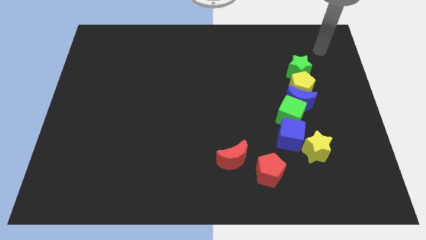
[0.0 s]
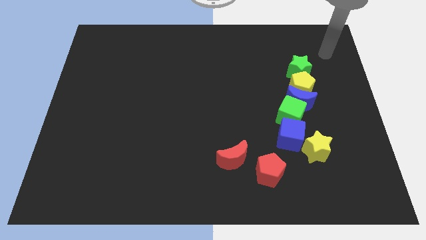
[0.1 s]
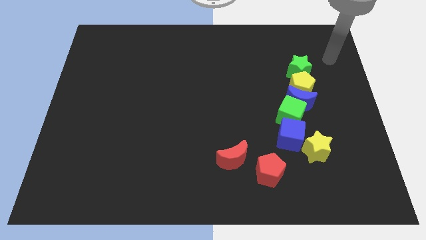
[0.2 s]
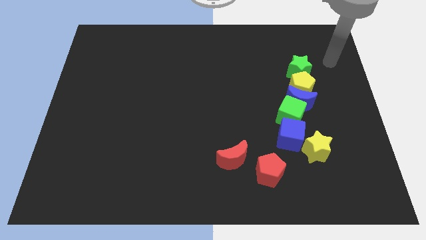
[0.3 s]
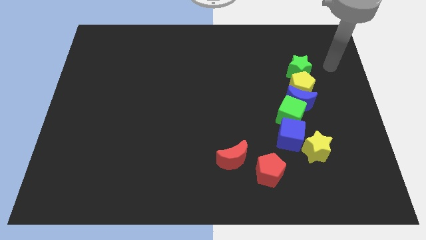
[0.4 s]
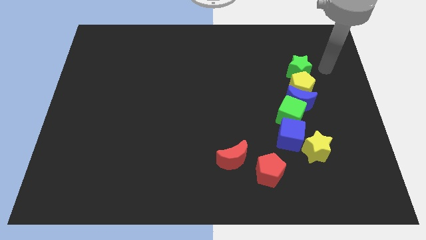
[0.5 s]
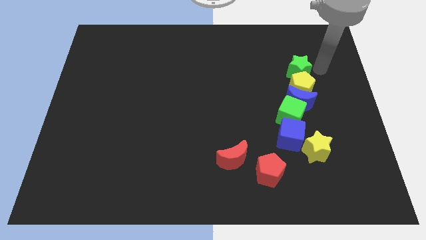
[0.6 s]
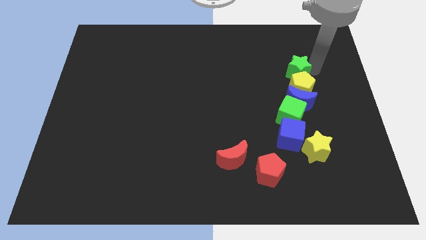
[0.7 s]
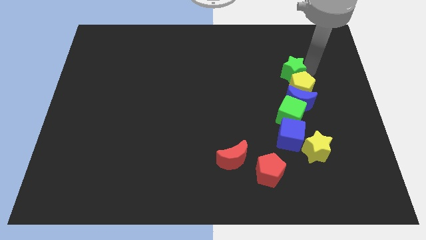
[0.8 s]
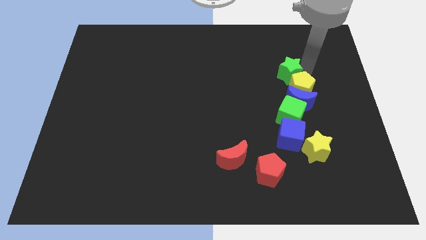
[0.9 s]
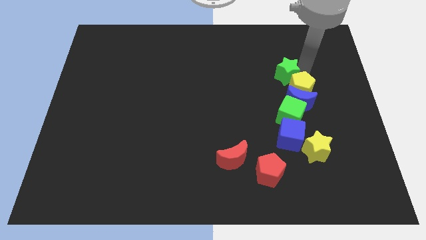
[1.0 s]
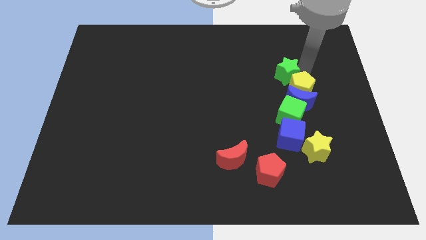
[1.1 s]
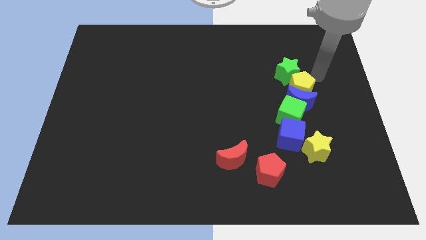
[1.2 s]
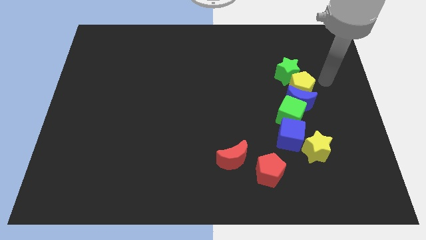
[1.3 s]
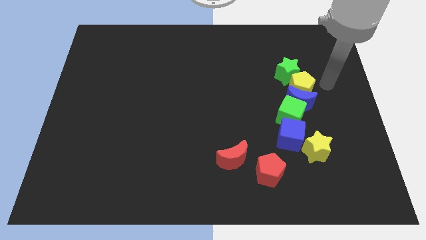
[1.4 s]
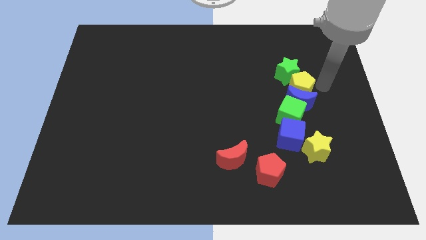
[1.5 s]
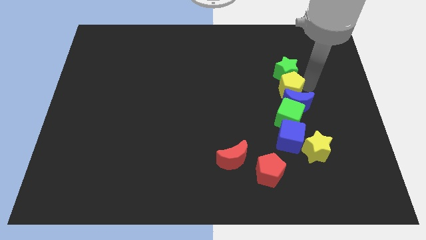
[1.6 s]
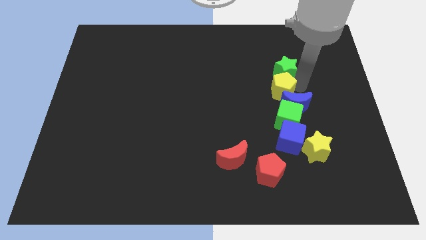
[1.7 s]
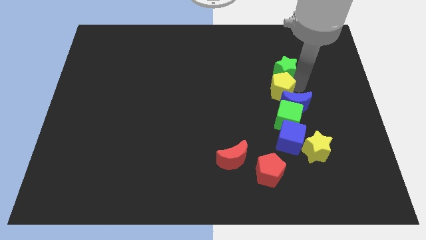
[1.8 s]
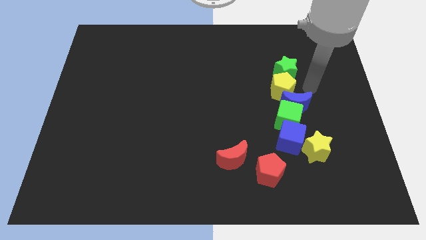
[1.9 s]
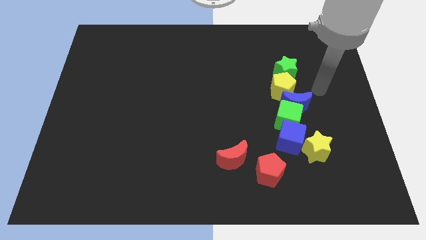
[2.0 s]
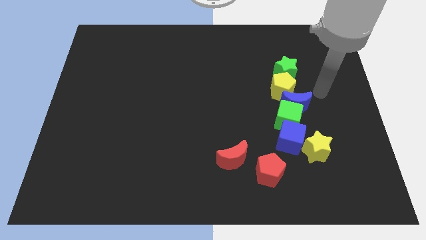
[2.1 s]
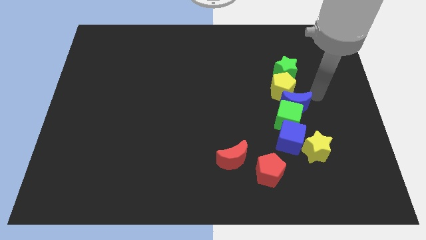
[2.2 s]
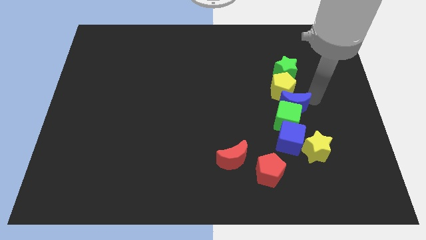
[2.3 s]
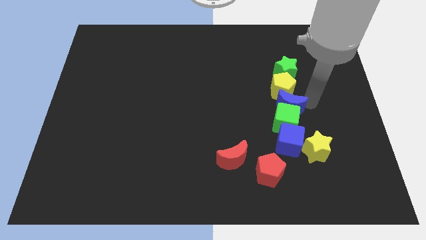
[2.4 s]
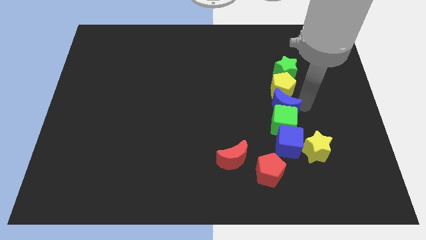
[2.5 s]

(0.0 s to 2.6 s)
move the green staryellow pentagon and blue moon slightly to the left

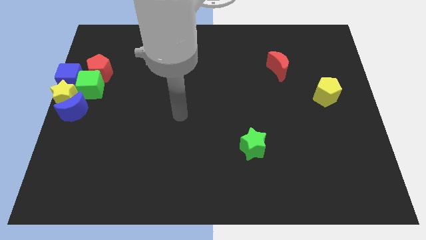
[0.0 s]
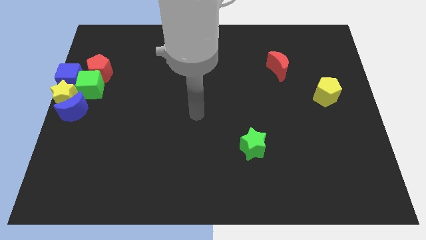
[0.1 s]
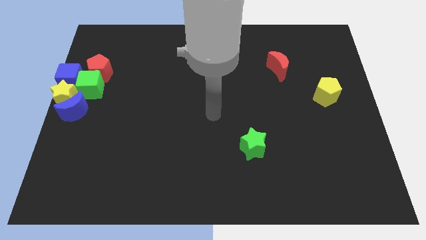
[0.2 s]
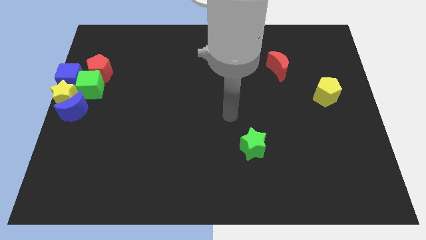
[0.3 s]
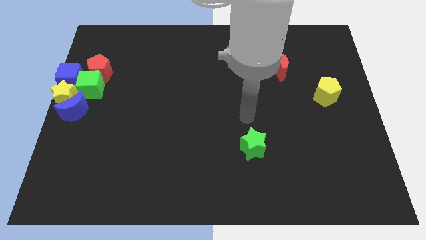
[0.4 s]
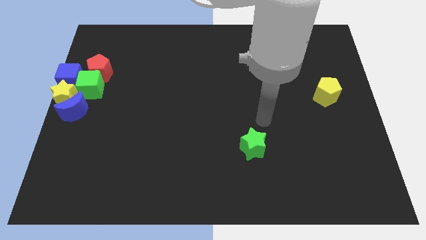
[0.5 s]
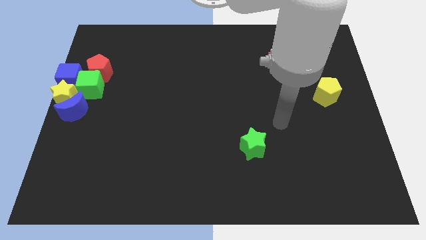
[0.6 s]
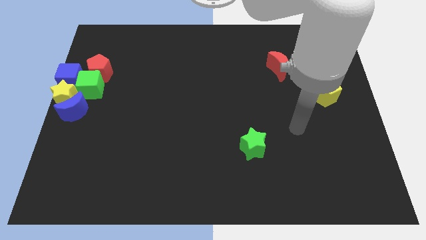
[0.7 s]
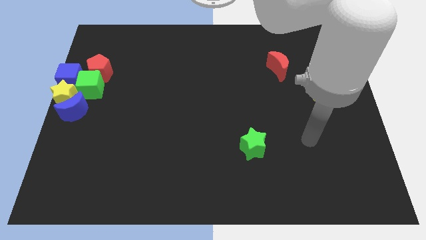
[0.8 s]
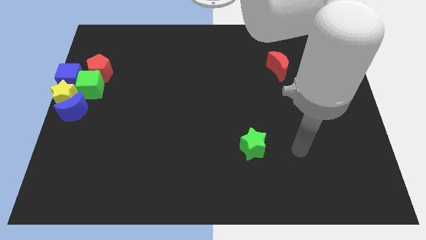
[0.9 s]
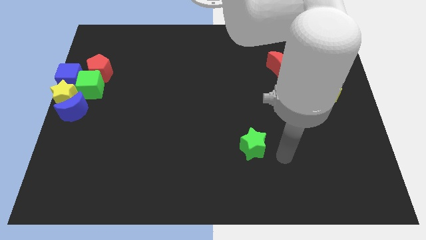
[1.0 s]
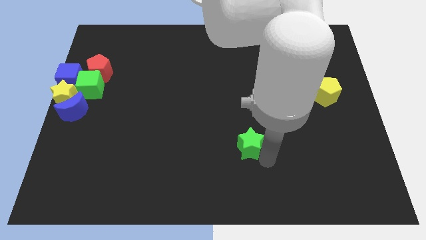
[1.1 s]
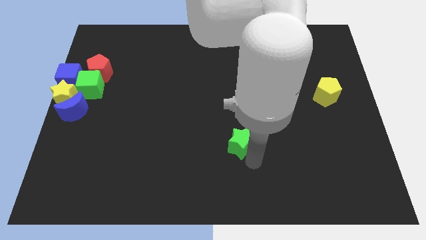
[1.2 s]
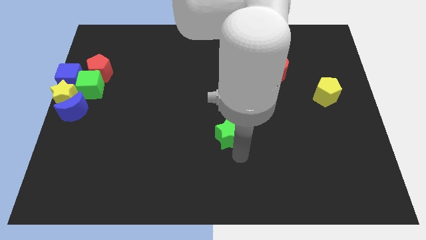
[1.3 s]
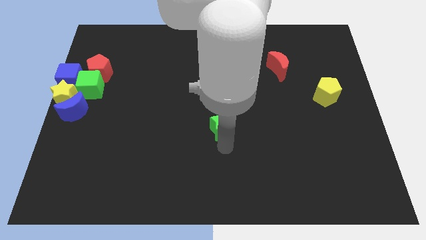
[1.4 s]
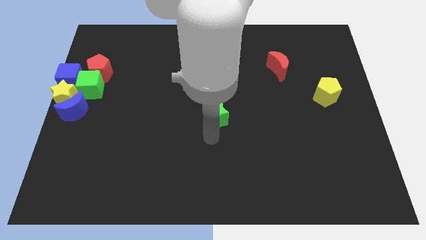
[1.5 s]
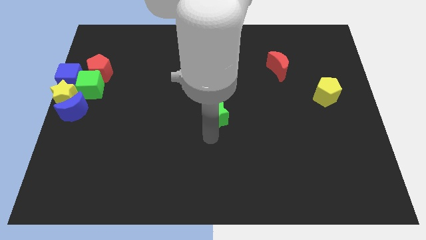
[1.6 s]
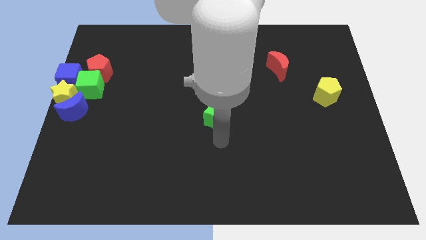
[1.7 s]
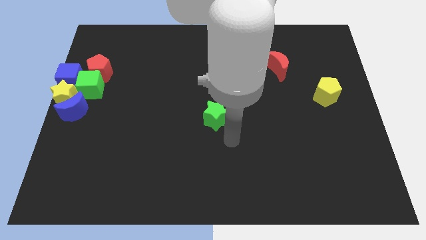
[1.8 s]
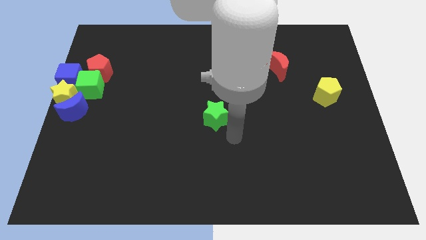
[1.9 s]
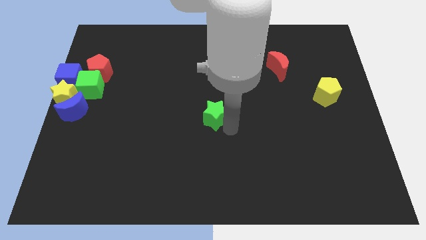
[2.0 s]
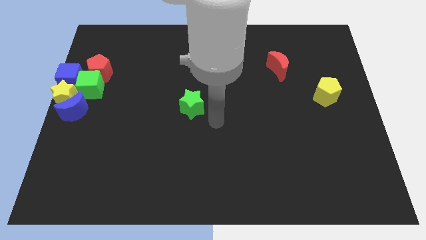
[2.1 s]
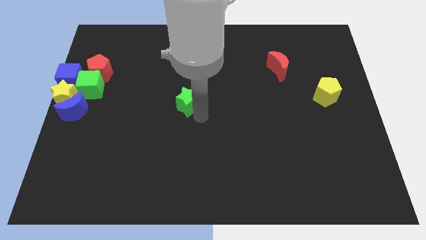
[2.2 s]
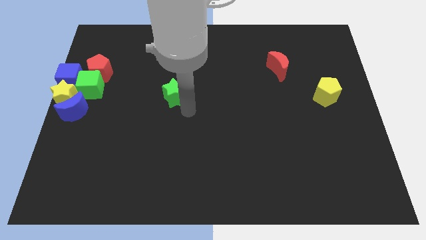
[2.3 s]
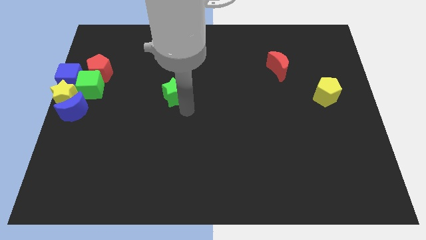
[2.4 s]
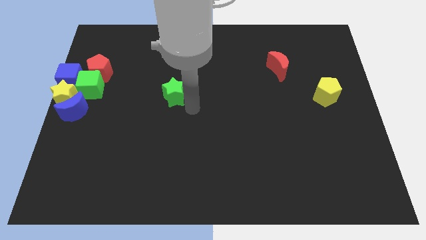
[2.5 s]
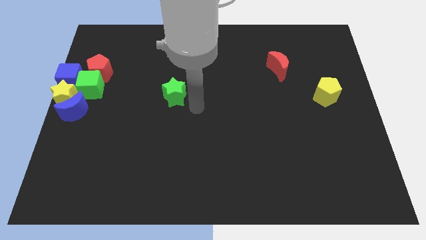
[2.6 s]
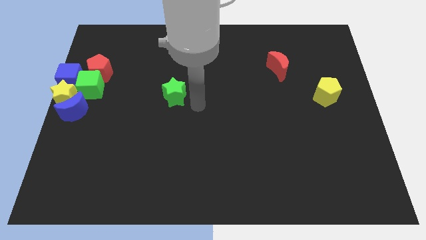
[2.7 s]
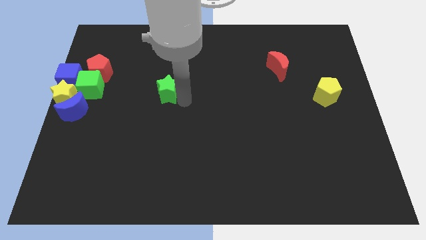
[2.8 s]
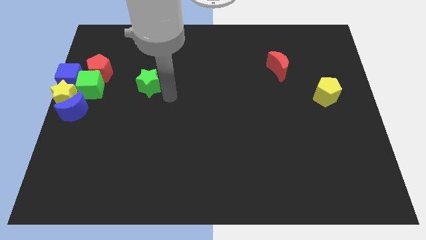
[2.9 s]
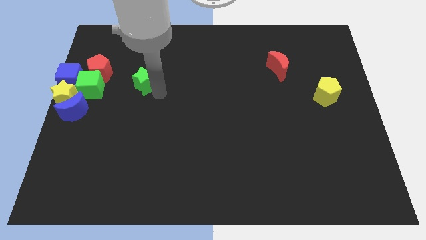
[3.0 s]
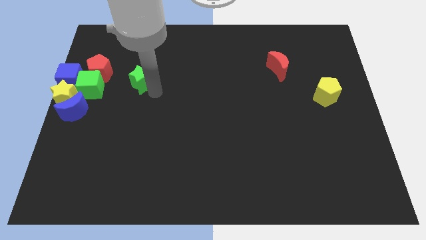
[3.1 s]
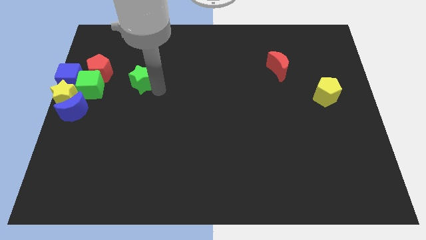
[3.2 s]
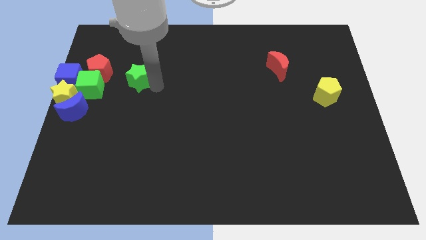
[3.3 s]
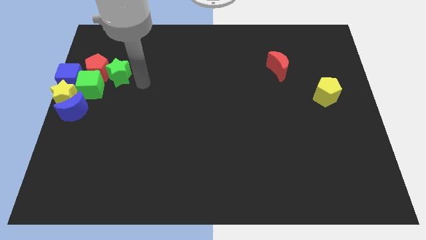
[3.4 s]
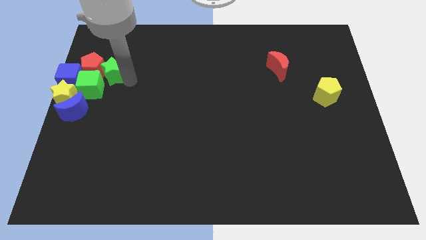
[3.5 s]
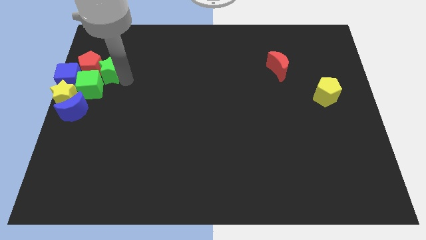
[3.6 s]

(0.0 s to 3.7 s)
push the green star to the right side of the red pentagon

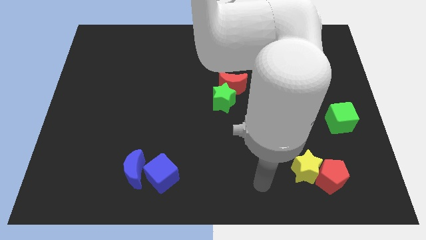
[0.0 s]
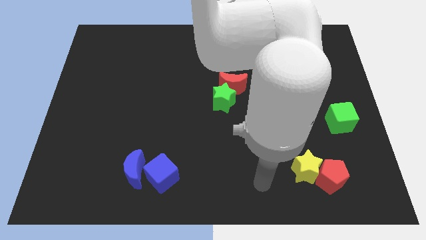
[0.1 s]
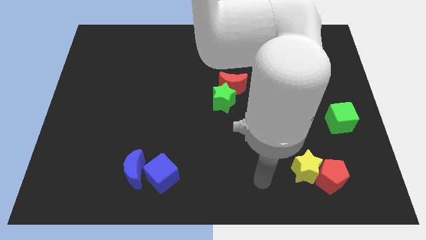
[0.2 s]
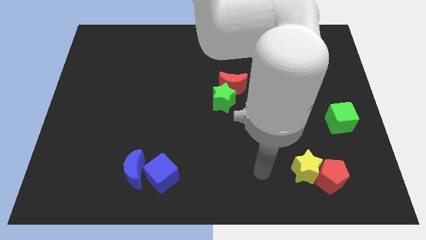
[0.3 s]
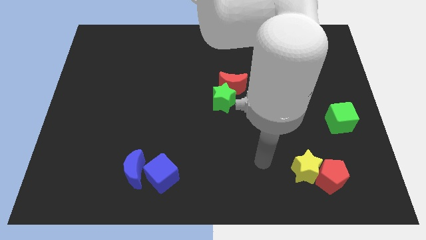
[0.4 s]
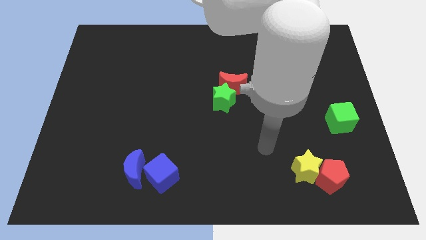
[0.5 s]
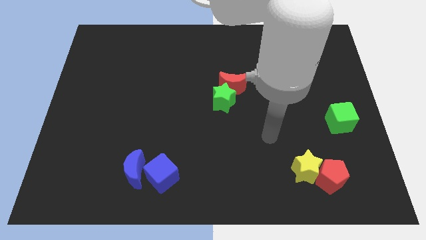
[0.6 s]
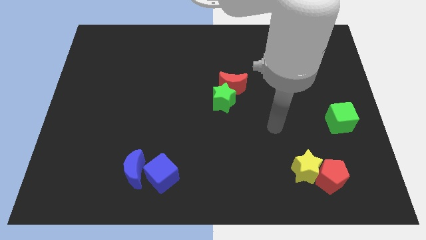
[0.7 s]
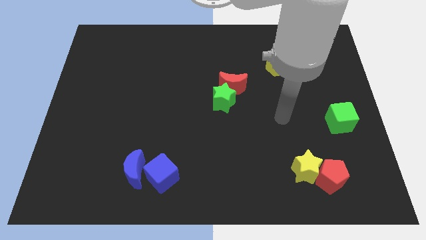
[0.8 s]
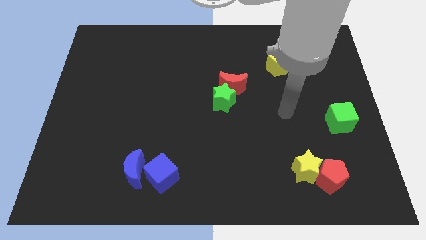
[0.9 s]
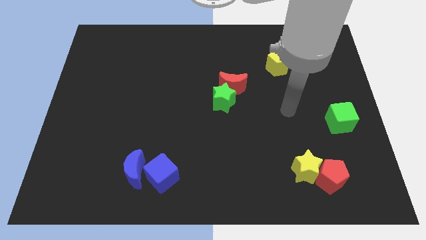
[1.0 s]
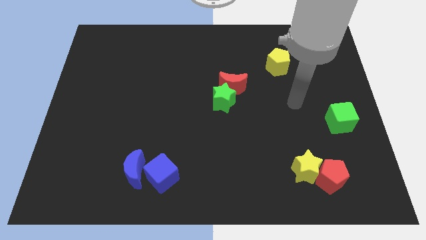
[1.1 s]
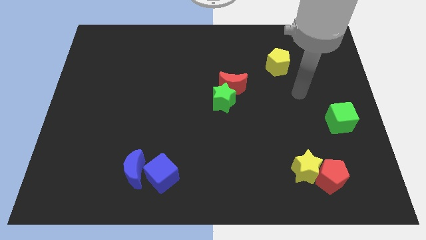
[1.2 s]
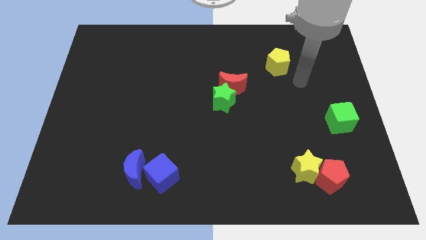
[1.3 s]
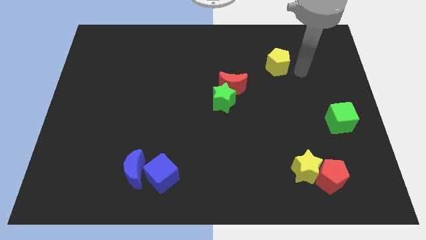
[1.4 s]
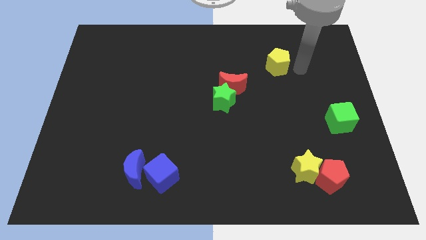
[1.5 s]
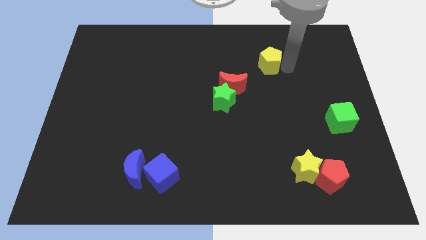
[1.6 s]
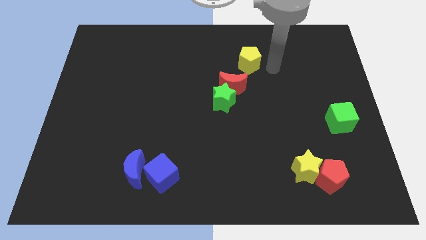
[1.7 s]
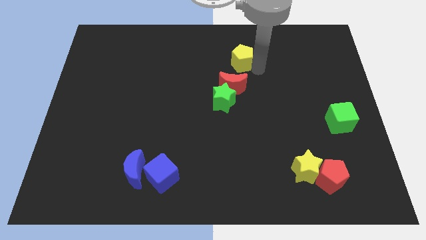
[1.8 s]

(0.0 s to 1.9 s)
push the yellow pentagon to the top of red moon

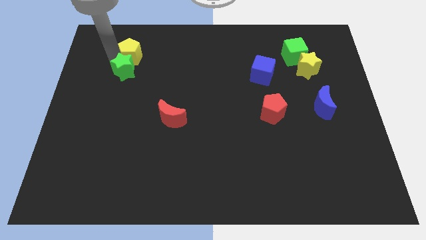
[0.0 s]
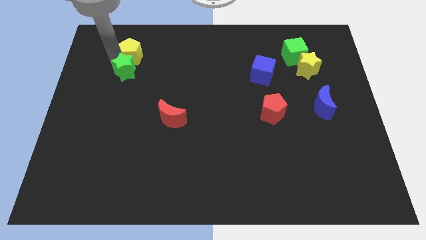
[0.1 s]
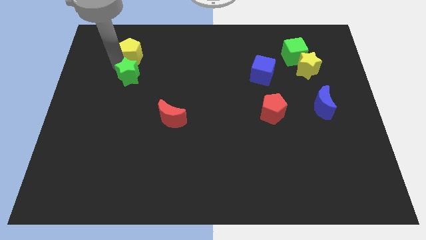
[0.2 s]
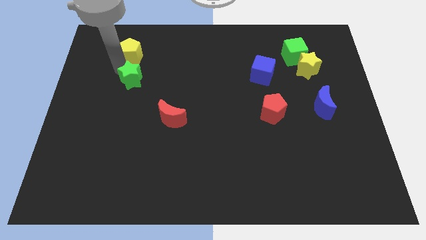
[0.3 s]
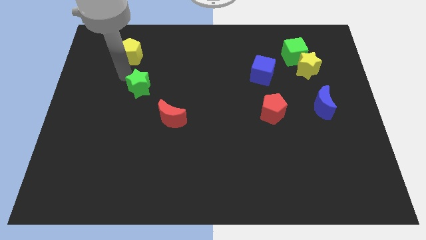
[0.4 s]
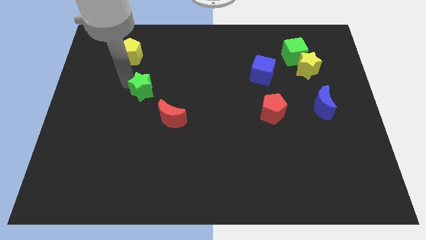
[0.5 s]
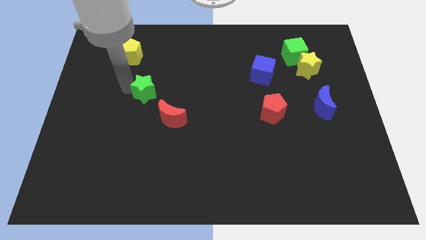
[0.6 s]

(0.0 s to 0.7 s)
push the green star closer to the red moon

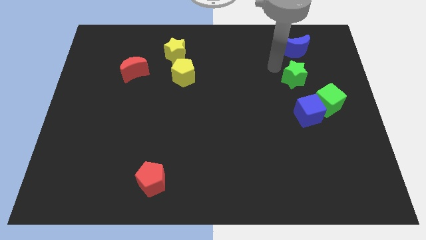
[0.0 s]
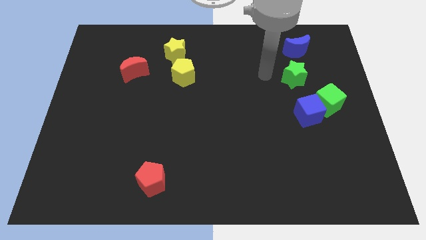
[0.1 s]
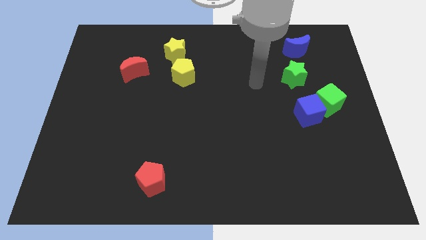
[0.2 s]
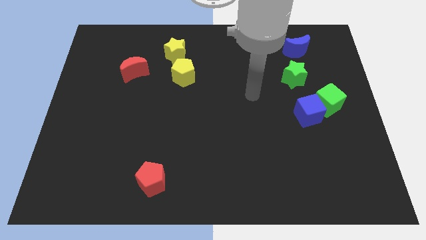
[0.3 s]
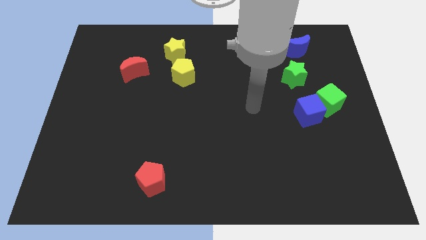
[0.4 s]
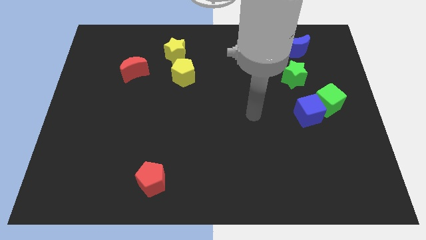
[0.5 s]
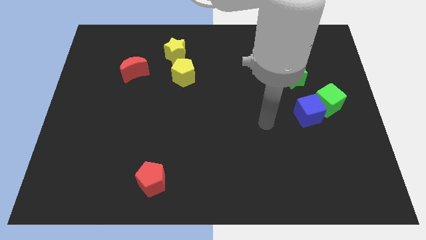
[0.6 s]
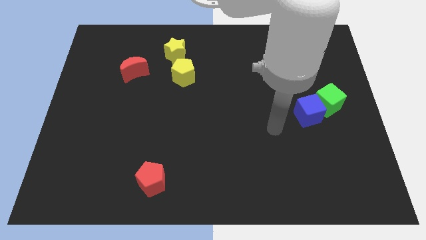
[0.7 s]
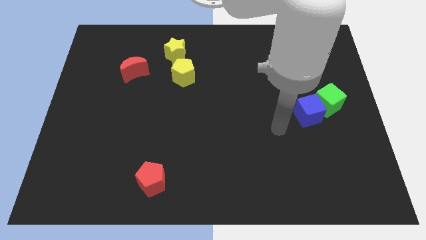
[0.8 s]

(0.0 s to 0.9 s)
move your arm away from the blue moon
